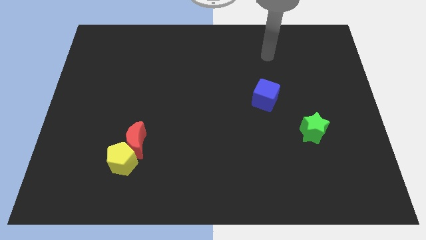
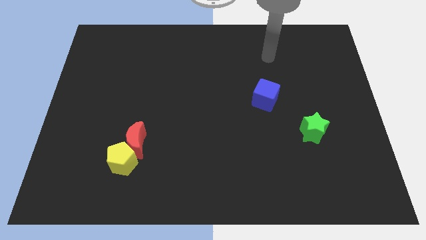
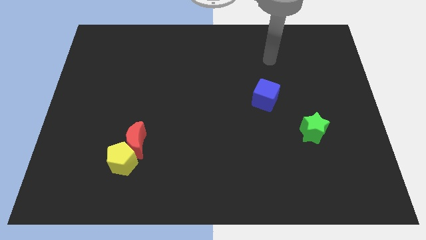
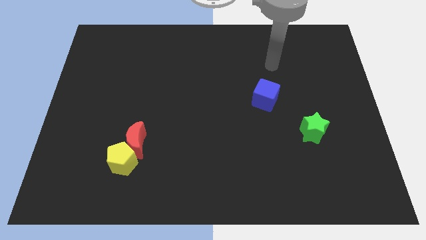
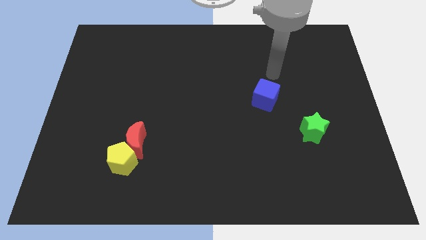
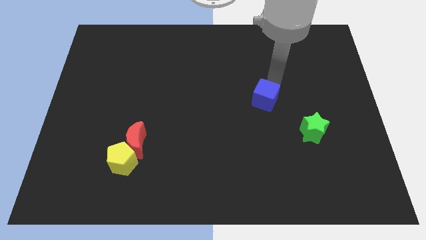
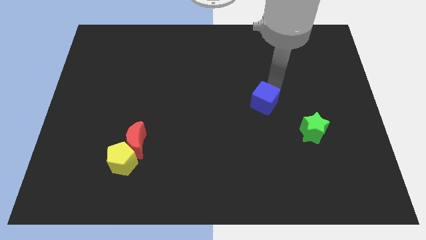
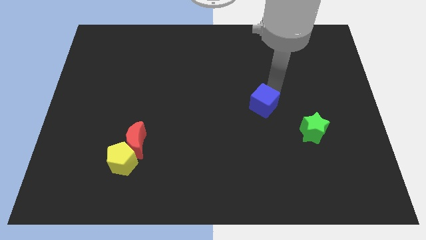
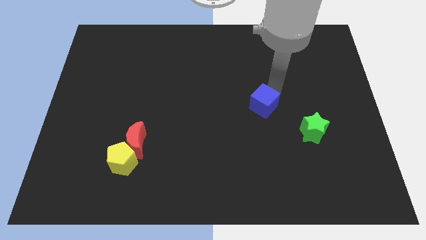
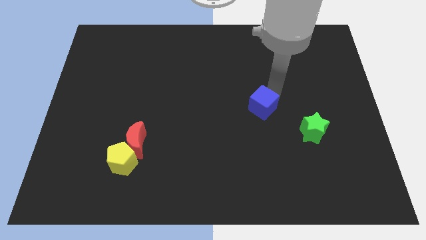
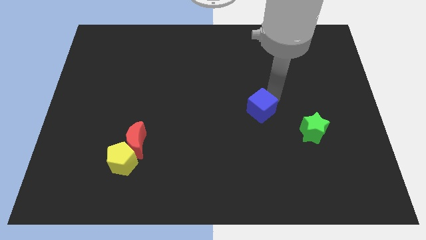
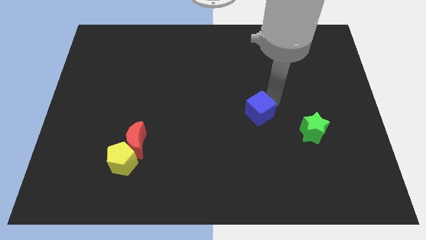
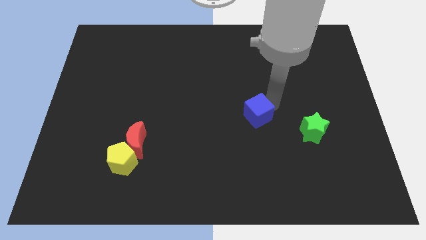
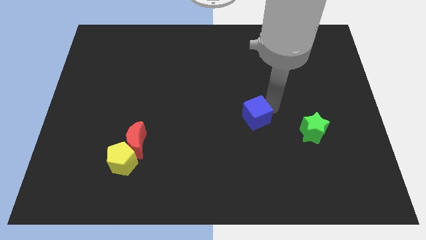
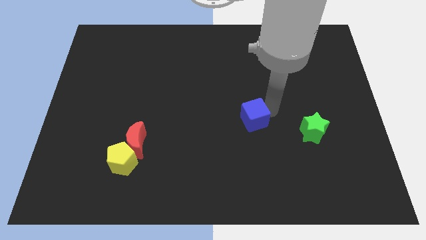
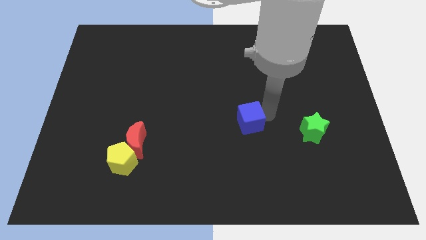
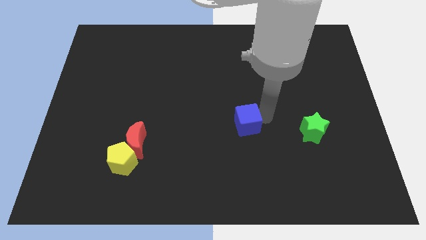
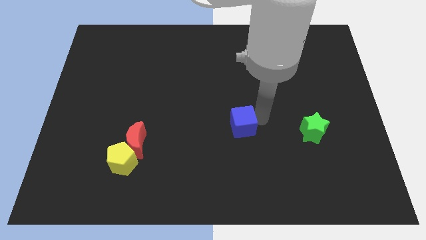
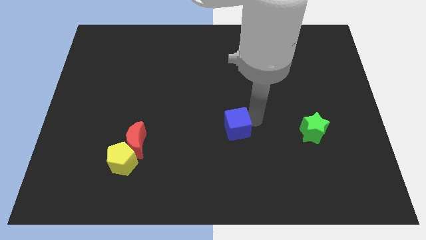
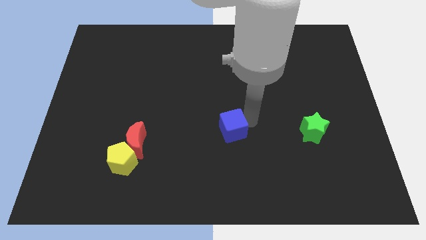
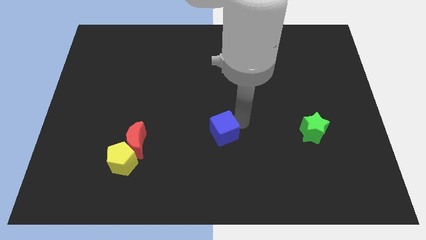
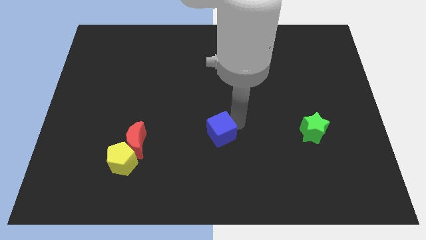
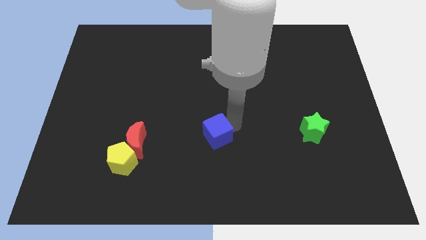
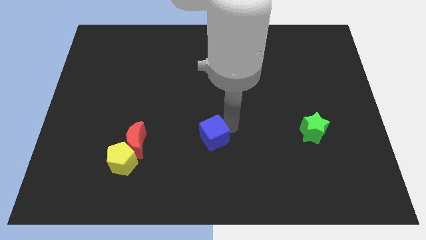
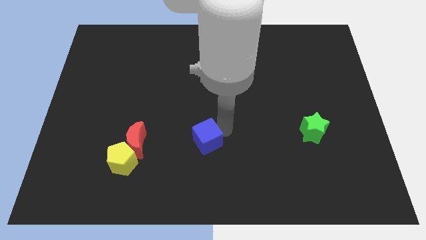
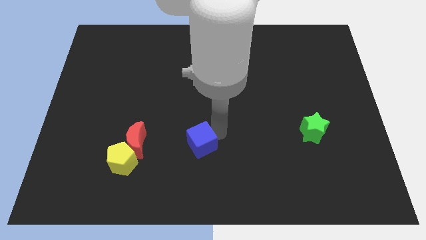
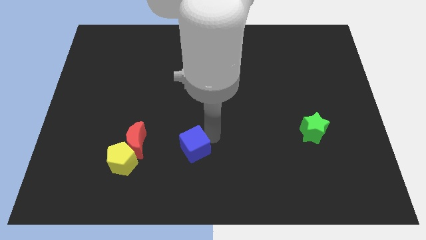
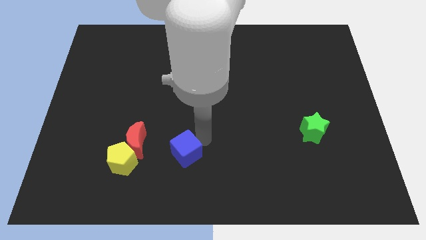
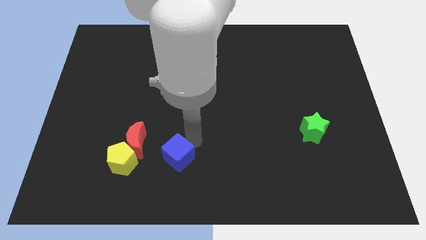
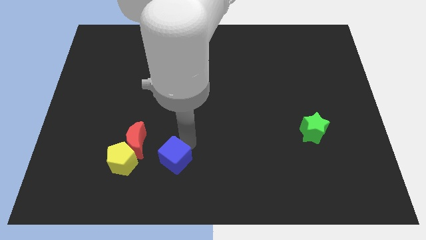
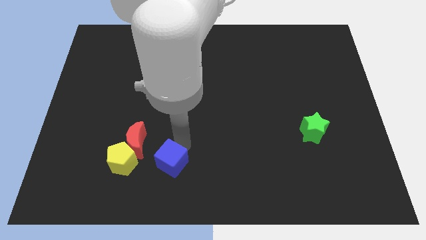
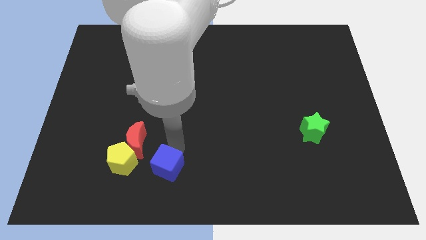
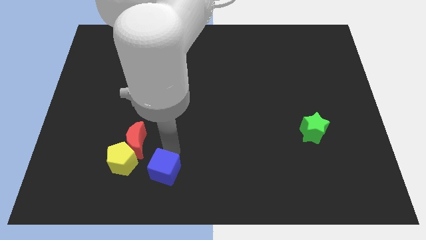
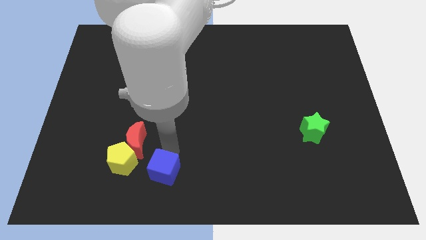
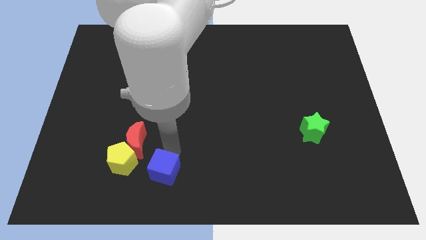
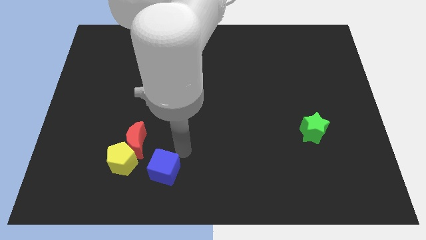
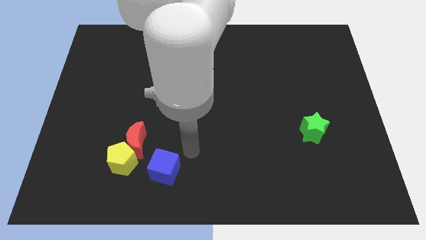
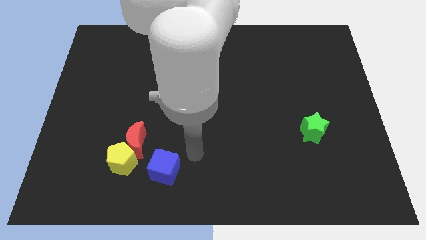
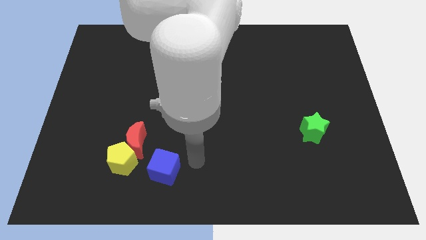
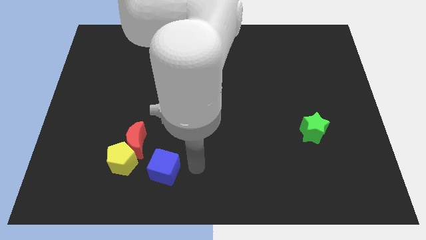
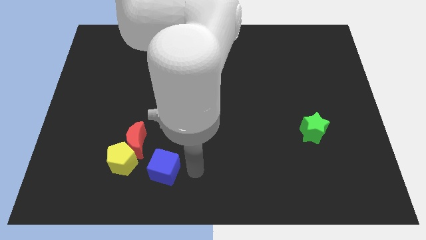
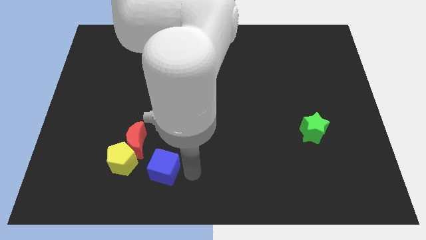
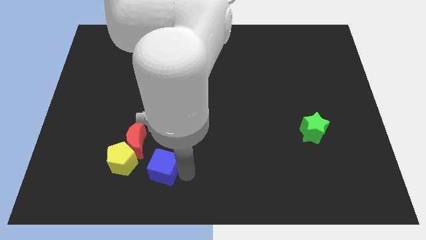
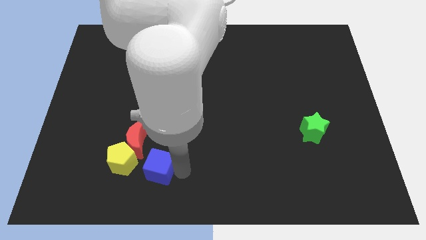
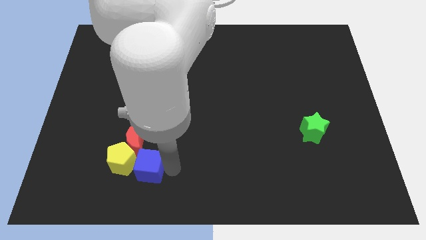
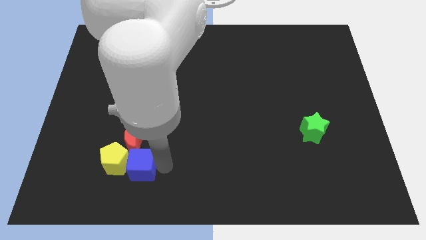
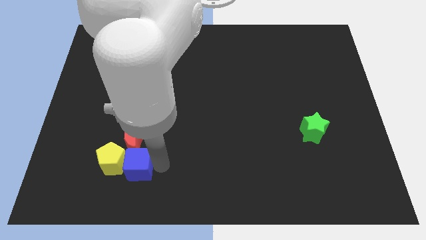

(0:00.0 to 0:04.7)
put the cube close to the yellow pentagon

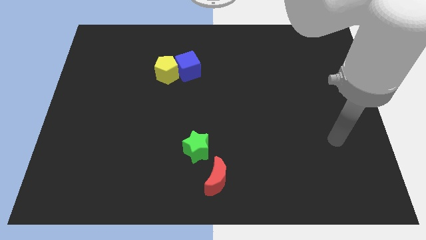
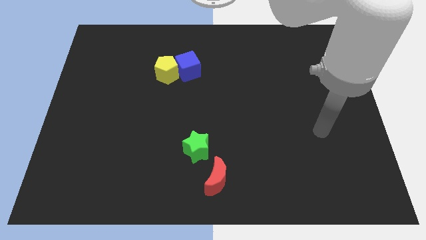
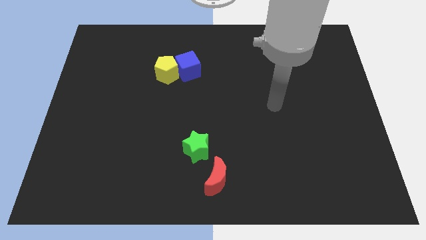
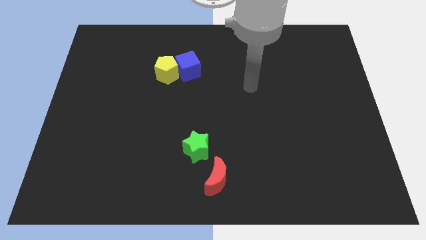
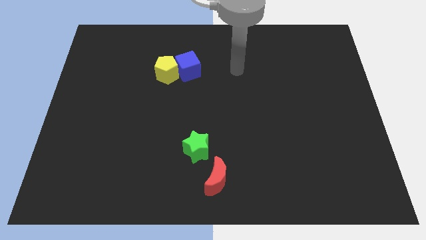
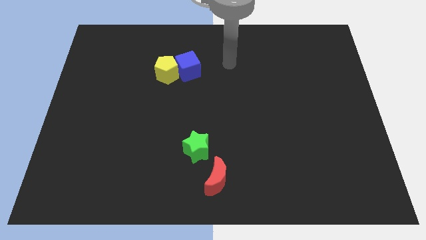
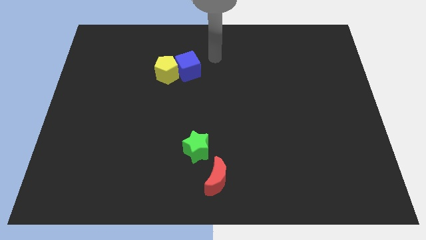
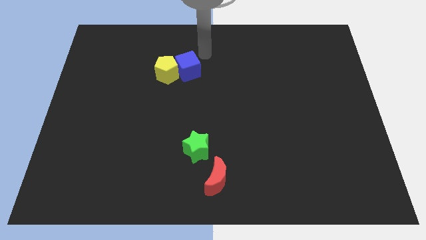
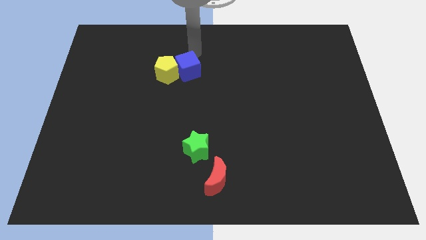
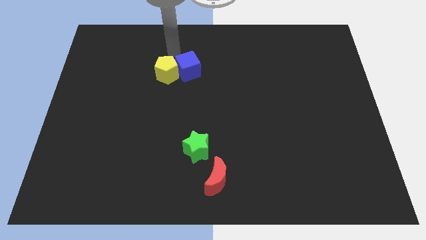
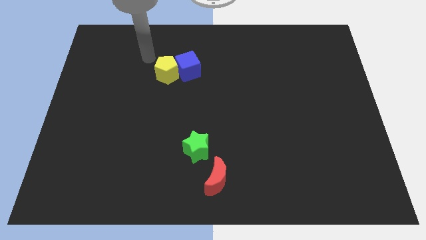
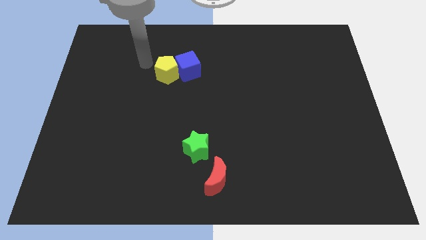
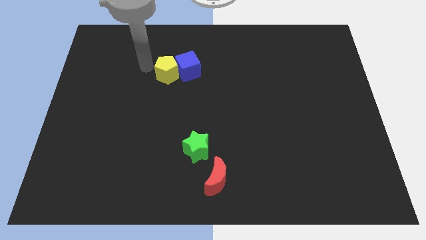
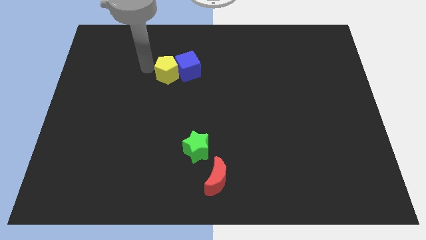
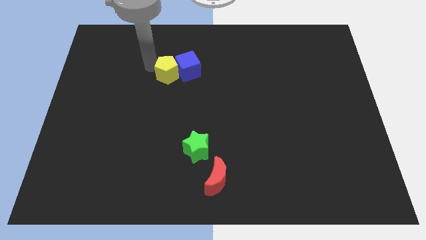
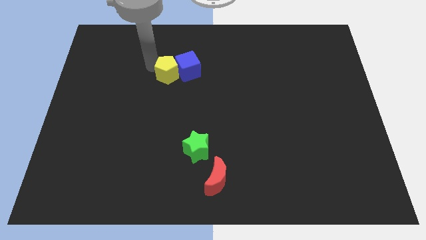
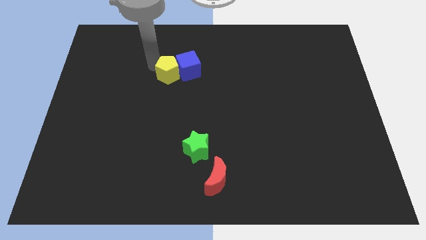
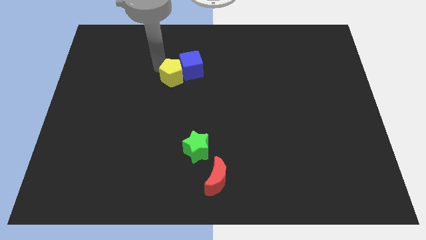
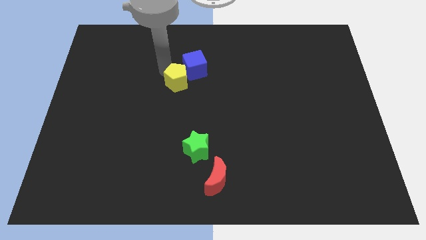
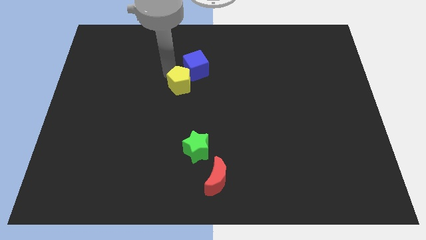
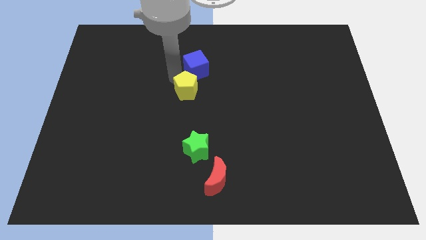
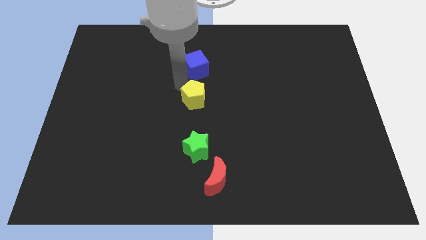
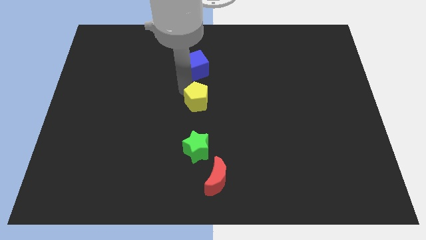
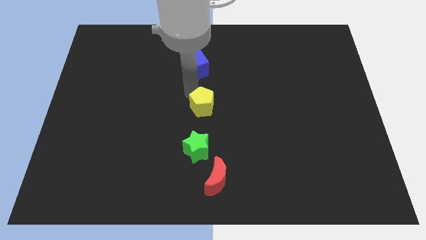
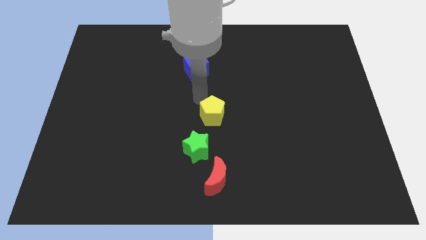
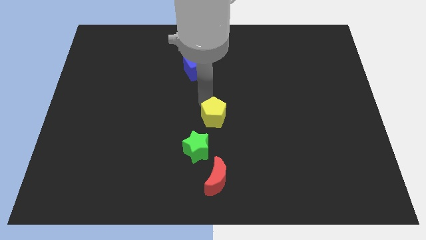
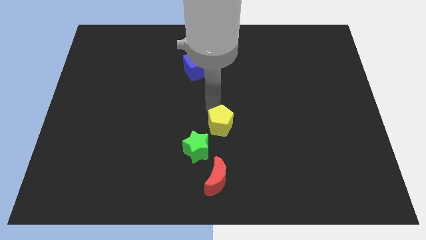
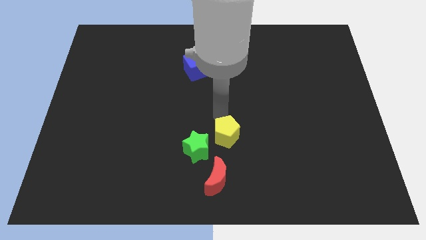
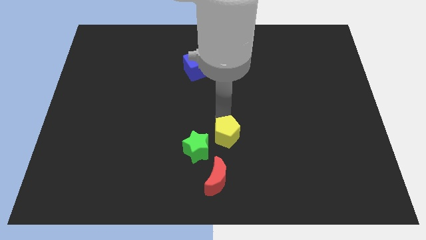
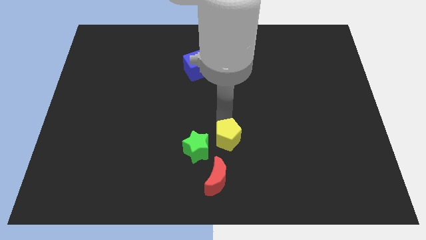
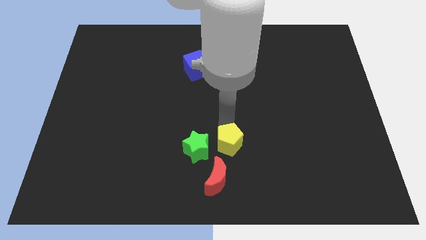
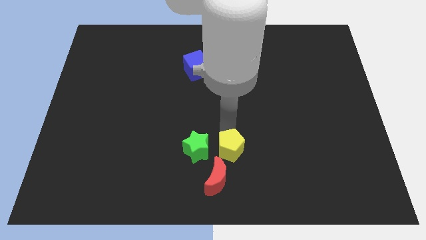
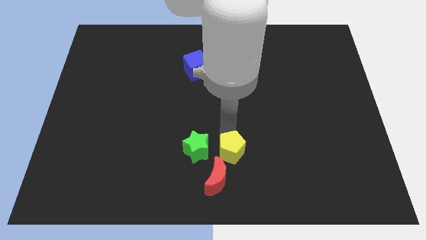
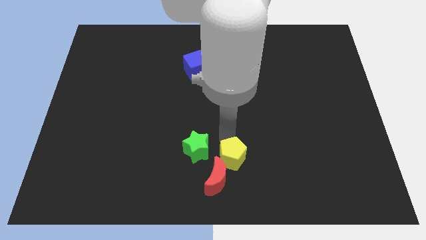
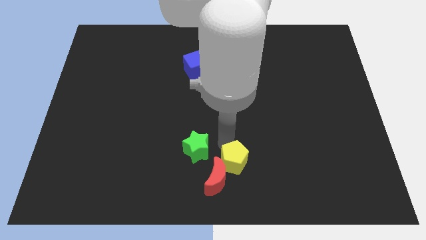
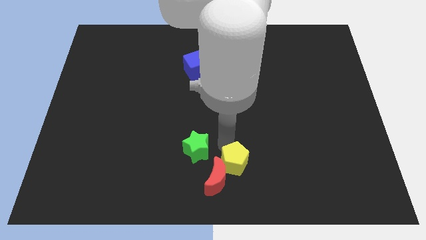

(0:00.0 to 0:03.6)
put the yellow pentagon to the moon

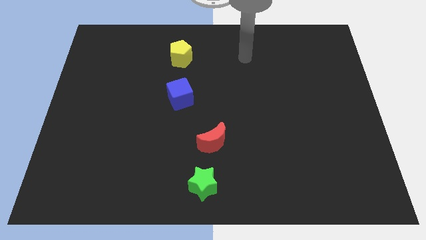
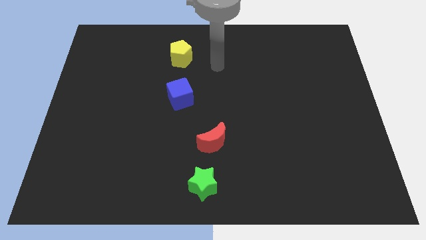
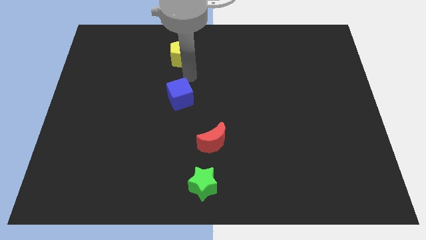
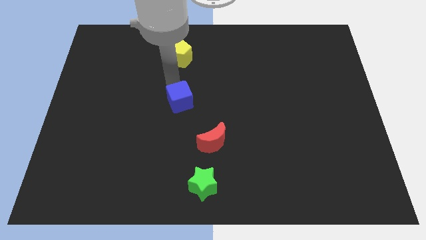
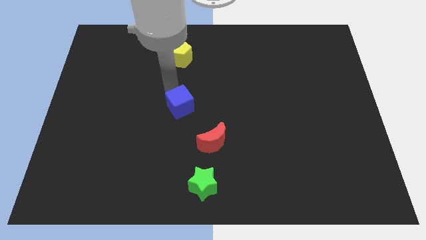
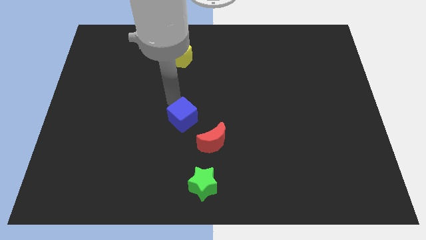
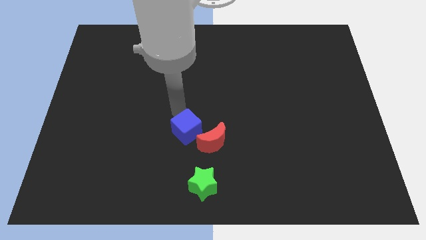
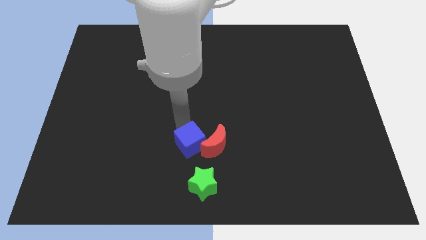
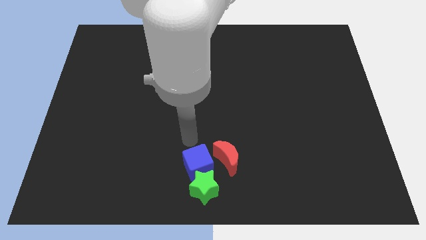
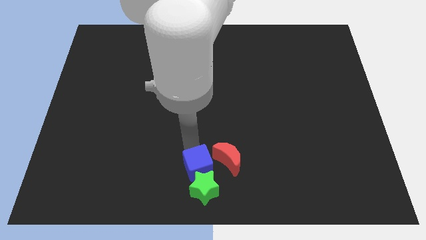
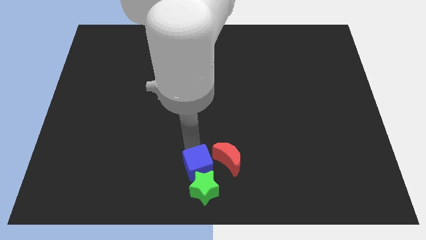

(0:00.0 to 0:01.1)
move the cube next to the star
